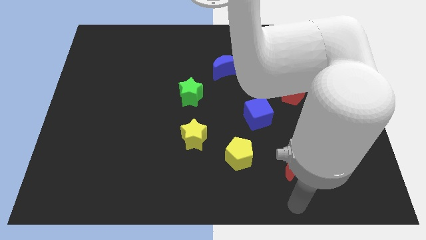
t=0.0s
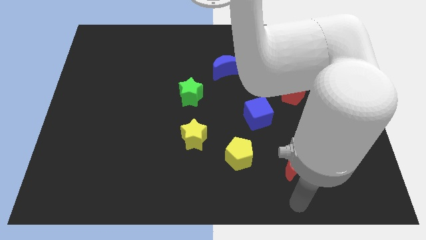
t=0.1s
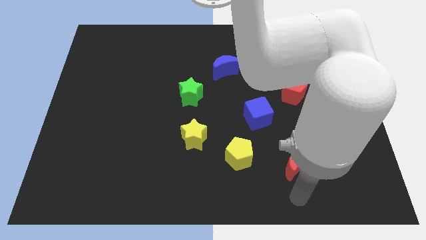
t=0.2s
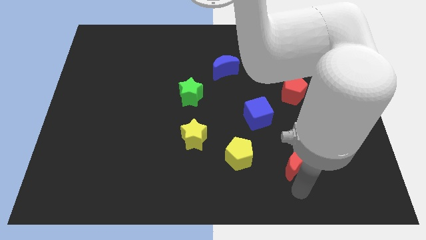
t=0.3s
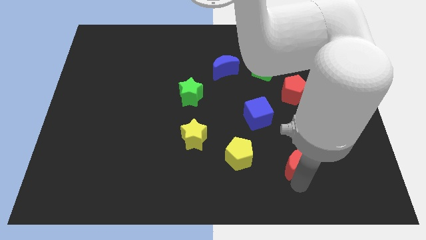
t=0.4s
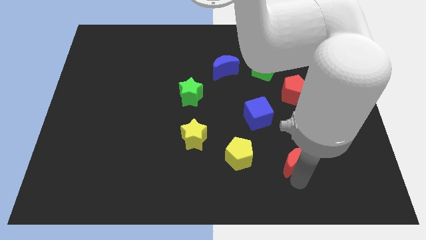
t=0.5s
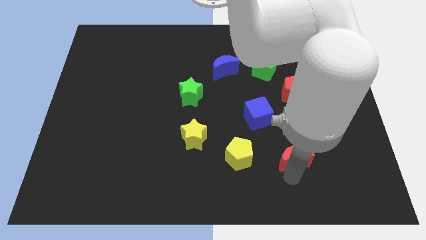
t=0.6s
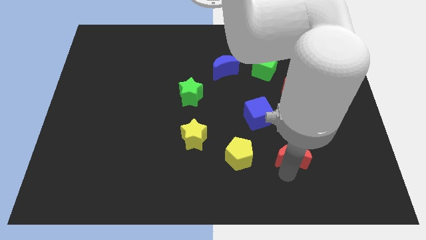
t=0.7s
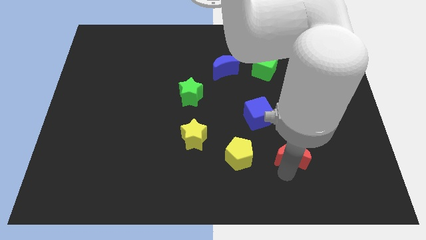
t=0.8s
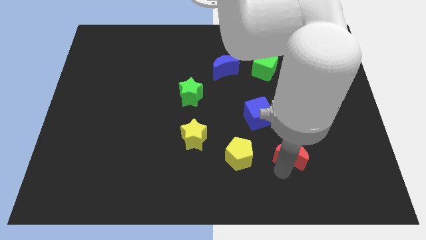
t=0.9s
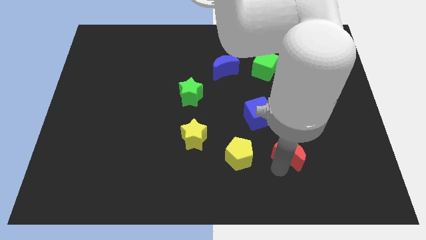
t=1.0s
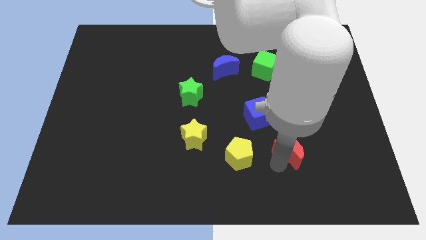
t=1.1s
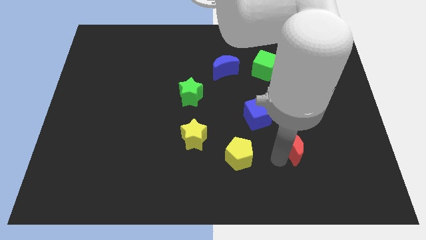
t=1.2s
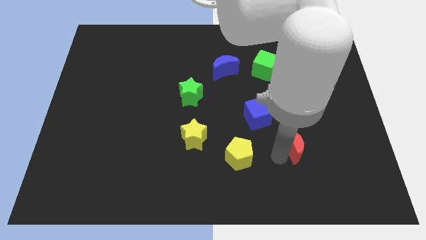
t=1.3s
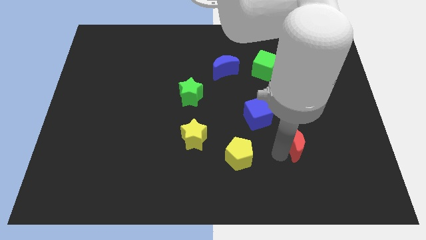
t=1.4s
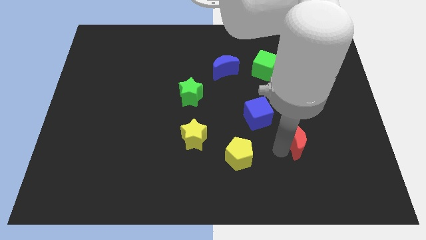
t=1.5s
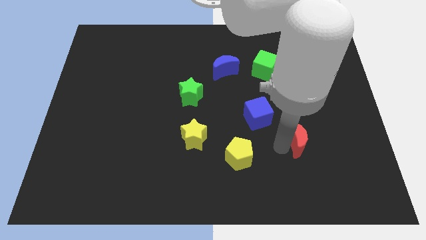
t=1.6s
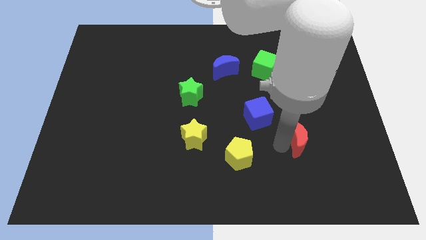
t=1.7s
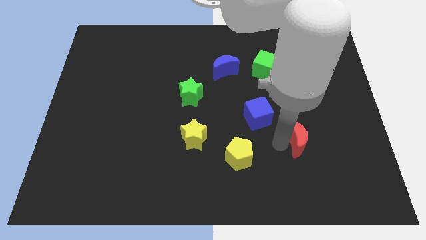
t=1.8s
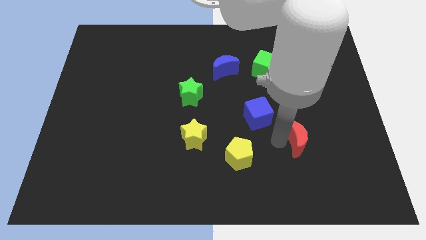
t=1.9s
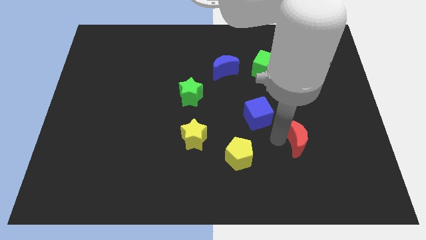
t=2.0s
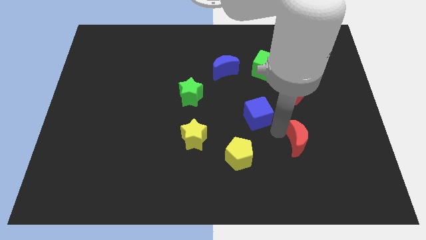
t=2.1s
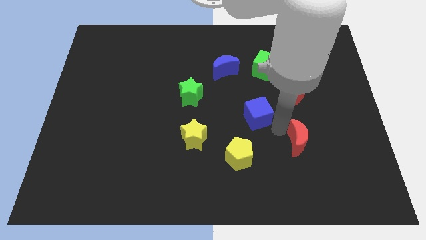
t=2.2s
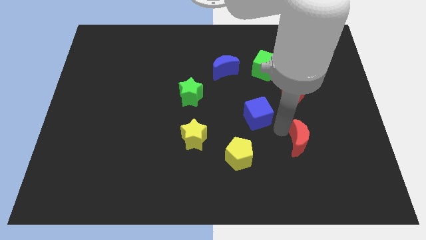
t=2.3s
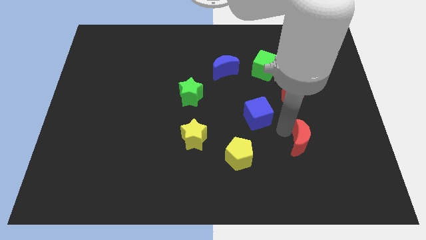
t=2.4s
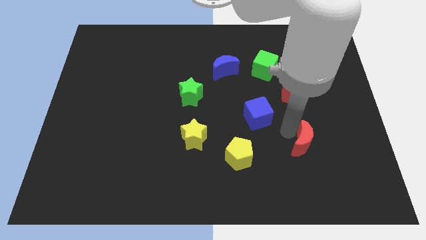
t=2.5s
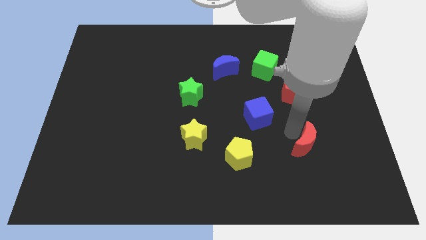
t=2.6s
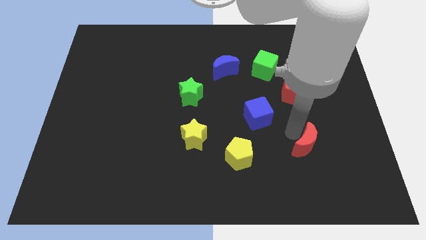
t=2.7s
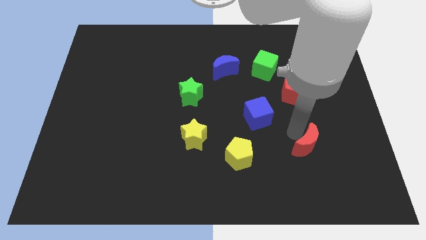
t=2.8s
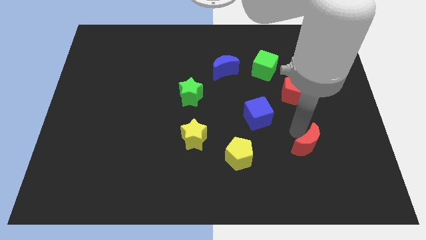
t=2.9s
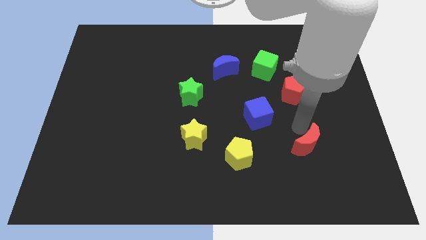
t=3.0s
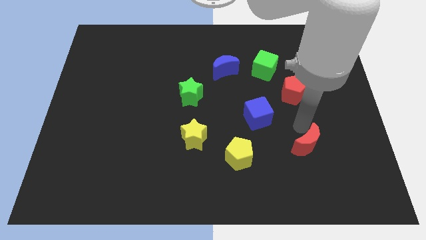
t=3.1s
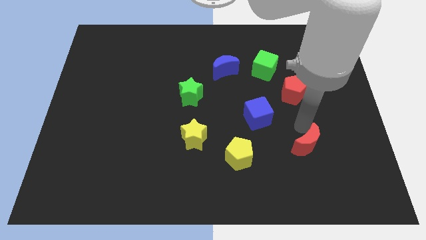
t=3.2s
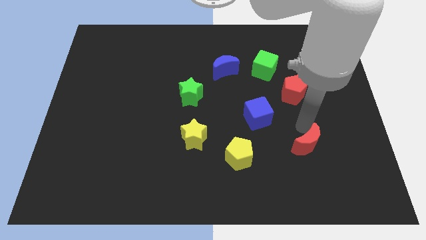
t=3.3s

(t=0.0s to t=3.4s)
place the red moon diagonally top right to yellow pentagon

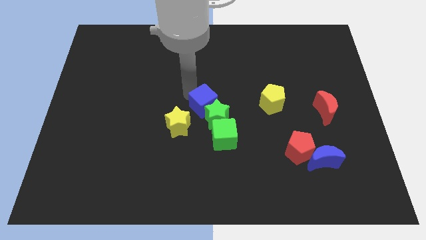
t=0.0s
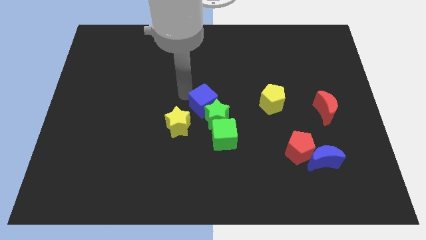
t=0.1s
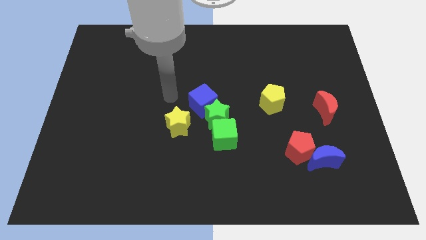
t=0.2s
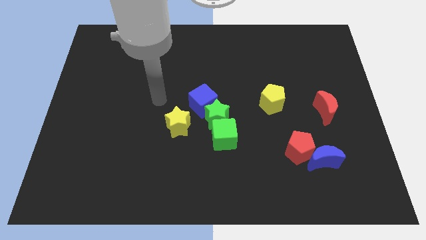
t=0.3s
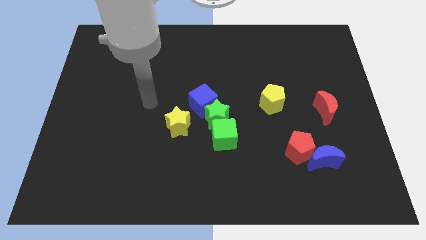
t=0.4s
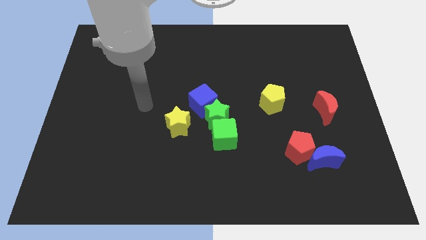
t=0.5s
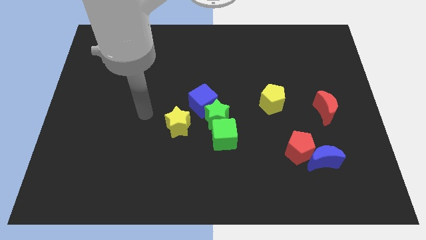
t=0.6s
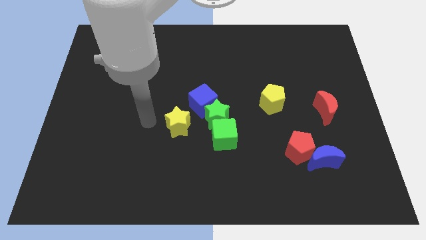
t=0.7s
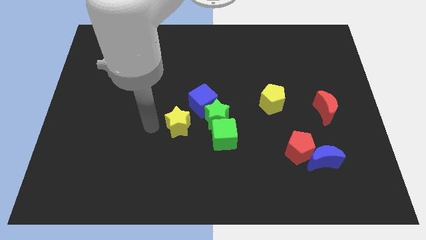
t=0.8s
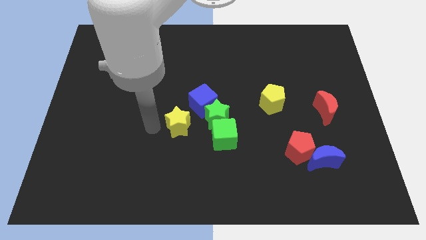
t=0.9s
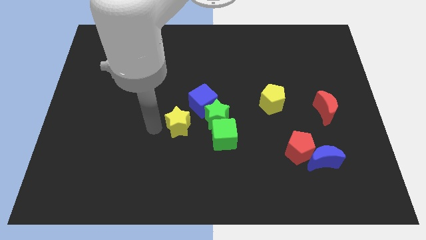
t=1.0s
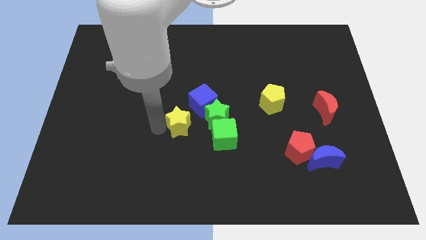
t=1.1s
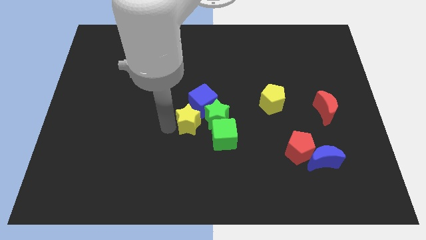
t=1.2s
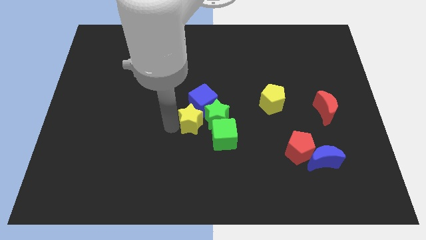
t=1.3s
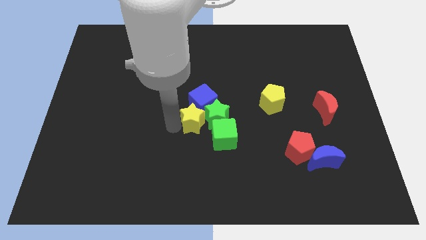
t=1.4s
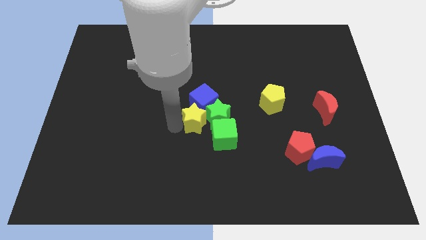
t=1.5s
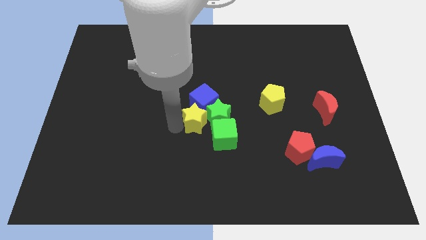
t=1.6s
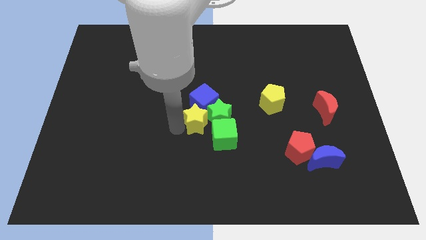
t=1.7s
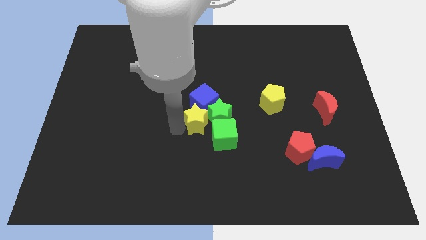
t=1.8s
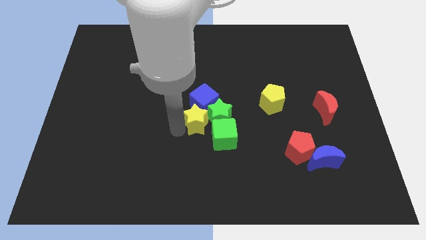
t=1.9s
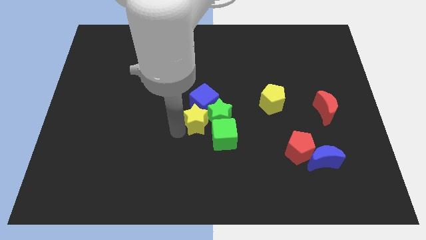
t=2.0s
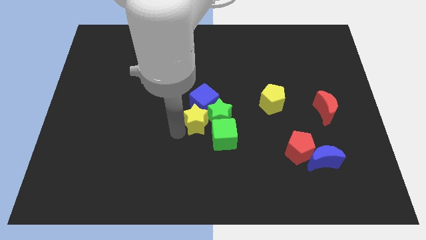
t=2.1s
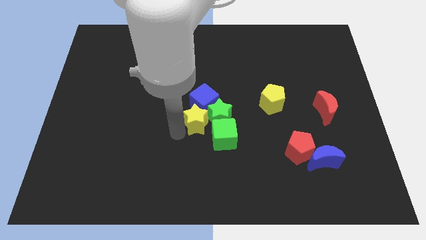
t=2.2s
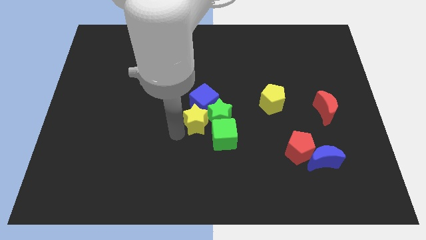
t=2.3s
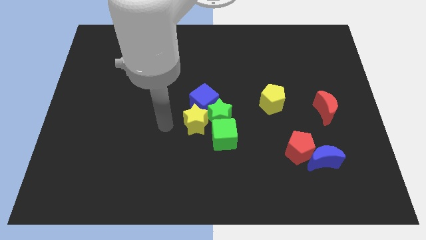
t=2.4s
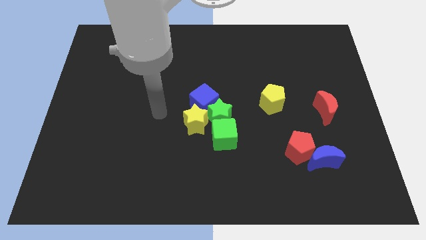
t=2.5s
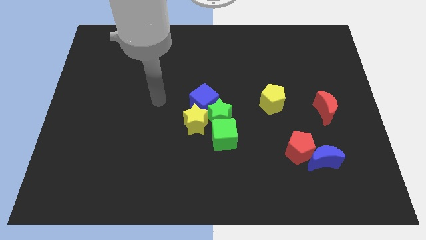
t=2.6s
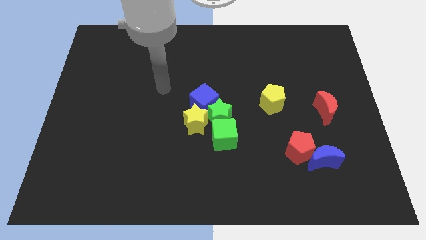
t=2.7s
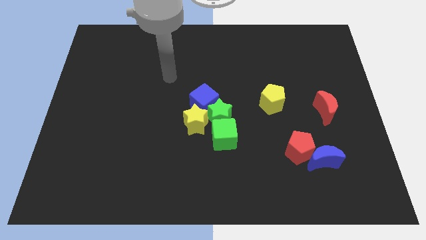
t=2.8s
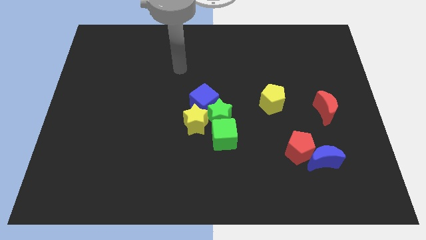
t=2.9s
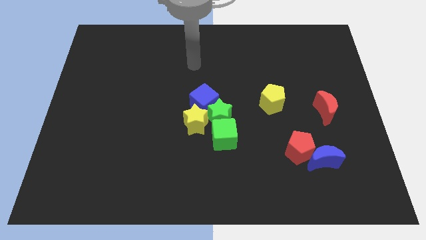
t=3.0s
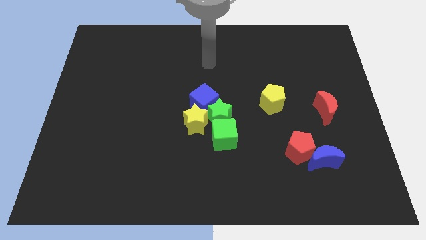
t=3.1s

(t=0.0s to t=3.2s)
push the yellow star into the green star

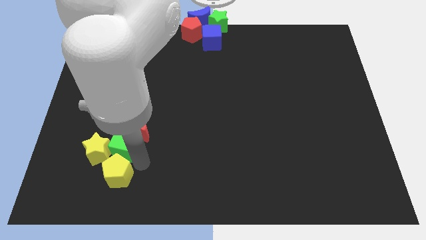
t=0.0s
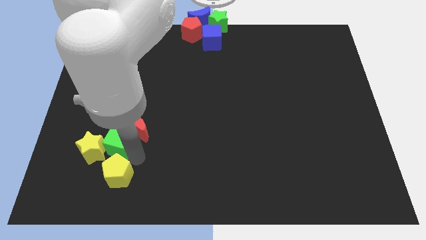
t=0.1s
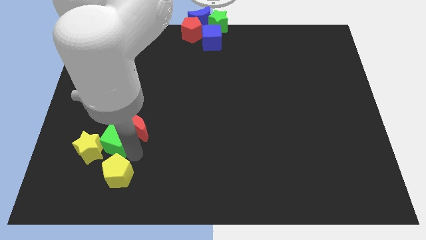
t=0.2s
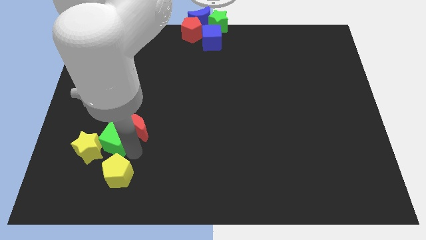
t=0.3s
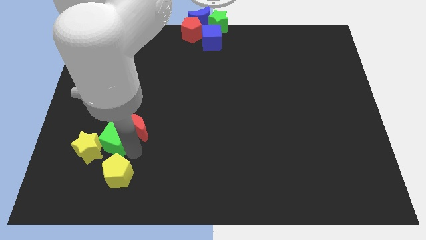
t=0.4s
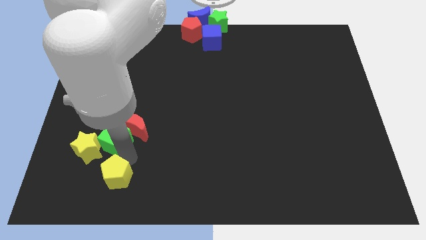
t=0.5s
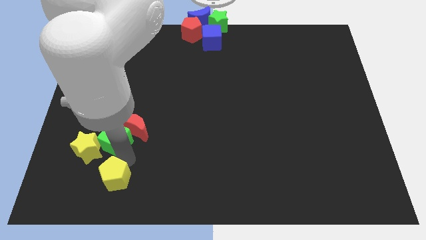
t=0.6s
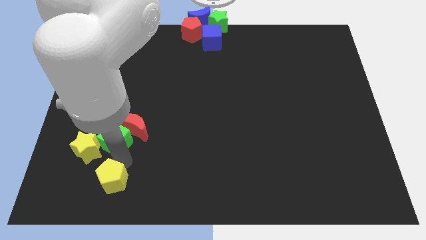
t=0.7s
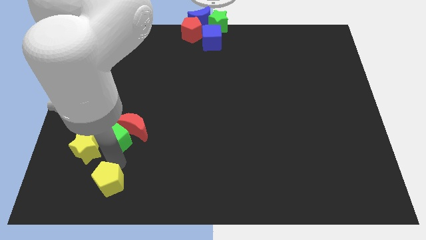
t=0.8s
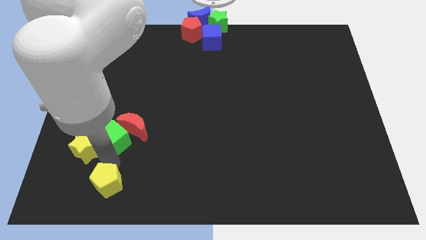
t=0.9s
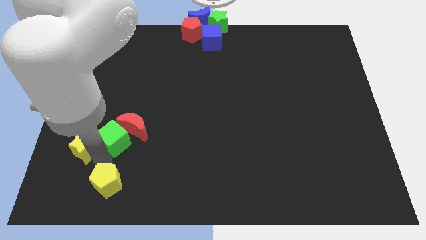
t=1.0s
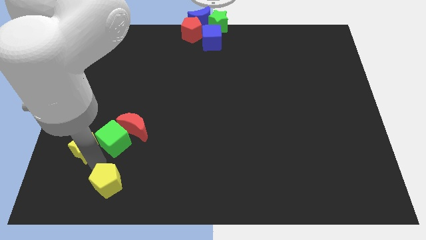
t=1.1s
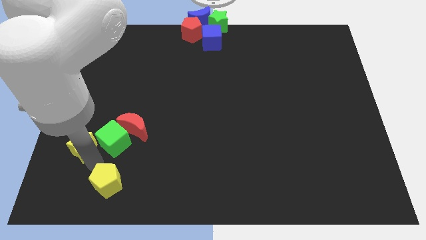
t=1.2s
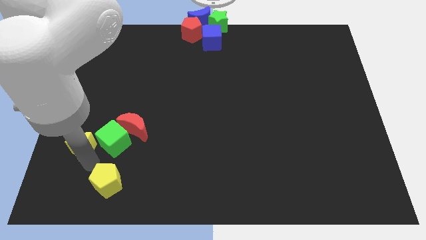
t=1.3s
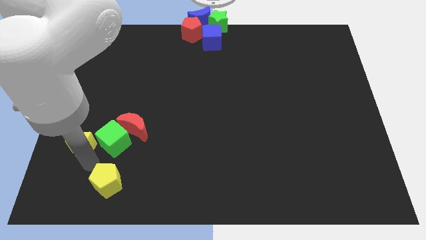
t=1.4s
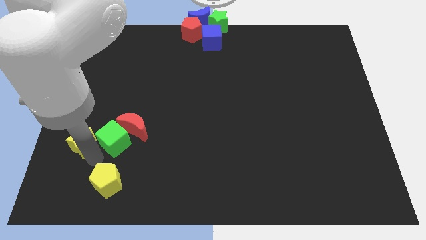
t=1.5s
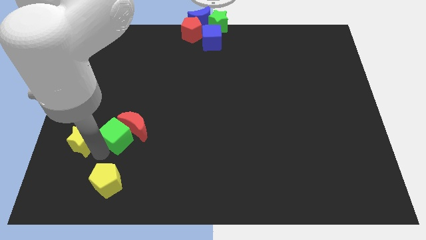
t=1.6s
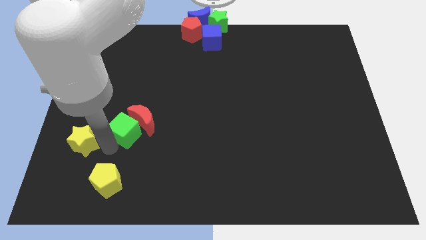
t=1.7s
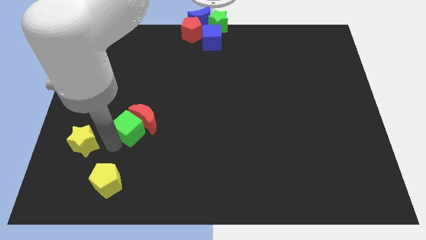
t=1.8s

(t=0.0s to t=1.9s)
adjust yellow blocks and the green cube to form a triangle

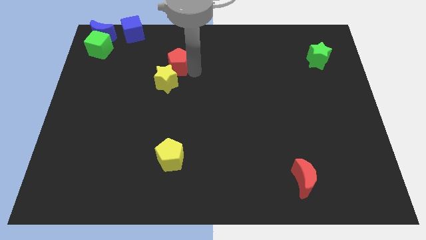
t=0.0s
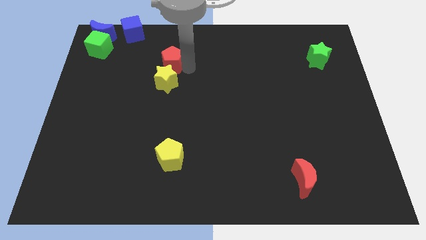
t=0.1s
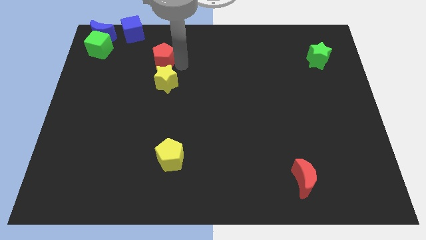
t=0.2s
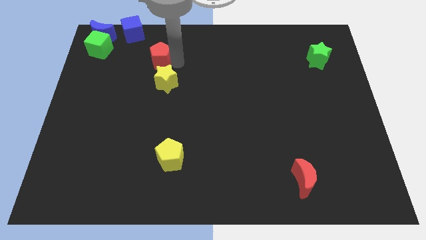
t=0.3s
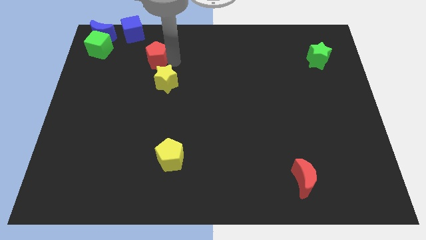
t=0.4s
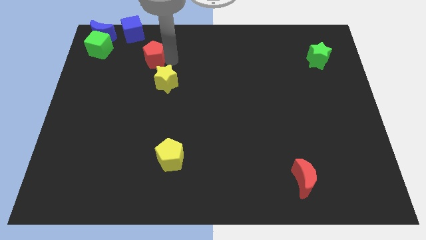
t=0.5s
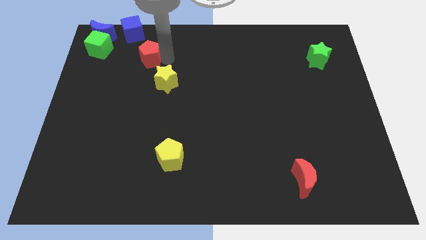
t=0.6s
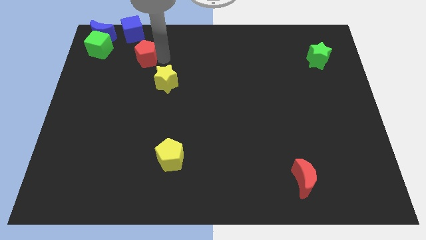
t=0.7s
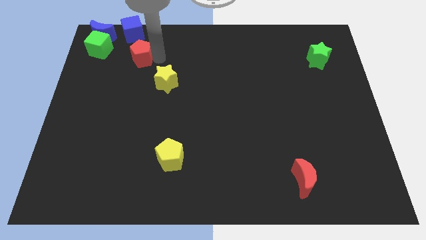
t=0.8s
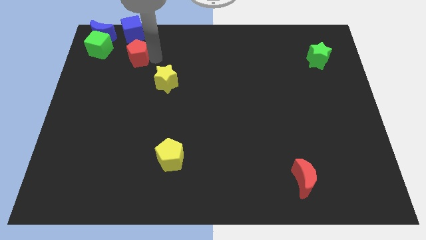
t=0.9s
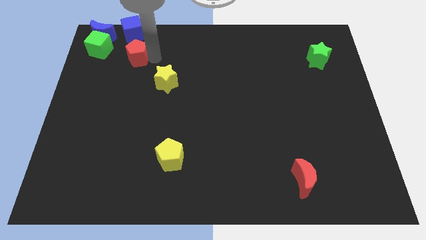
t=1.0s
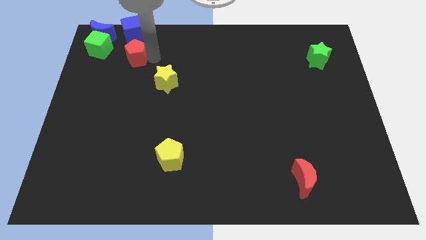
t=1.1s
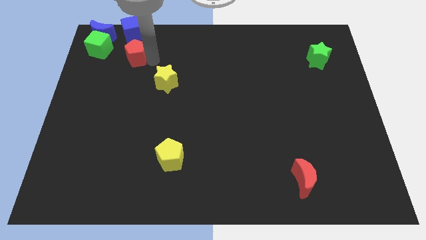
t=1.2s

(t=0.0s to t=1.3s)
separate red pentagon from yellow star
